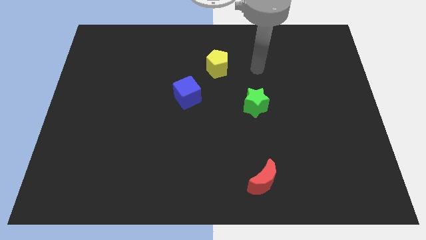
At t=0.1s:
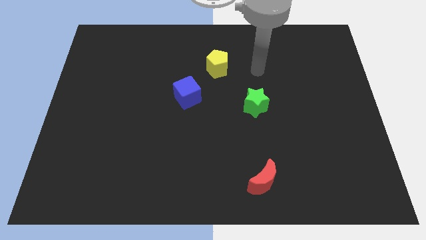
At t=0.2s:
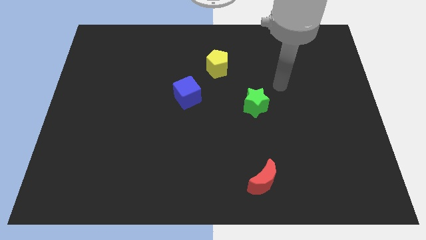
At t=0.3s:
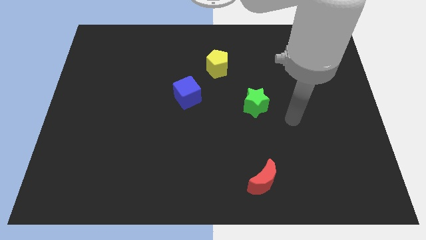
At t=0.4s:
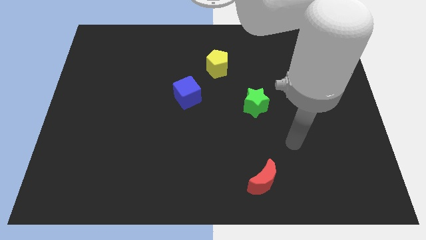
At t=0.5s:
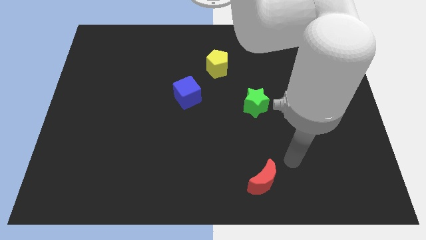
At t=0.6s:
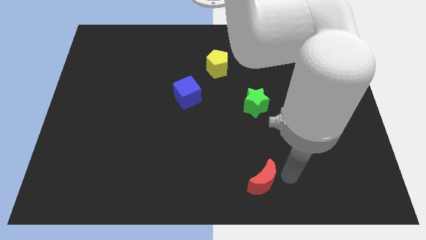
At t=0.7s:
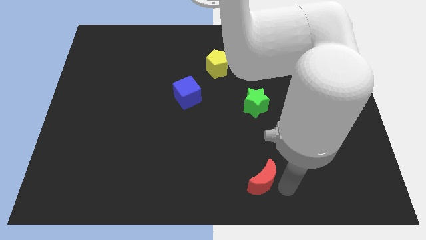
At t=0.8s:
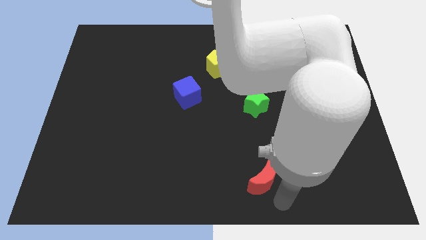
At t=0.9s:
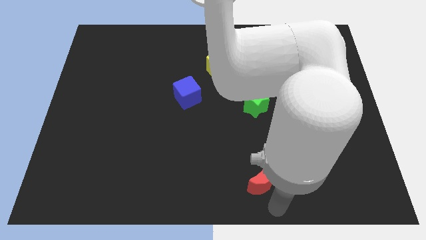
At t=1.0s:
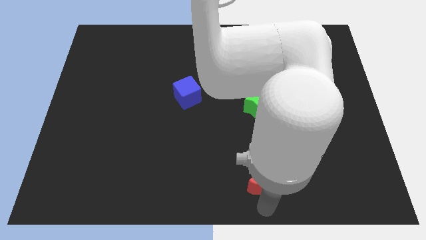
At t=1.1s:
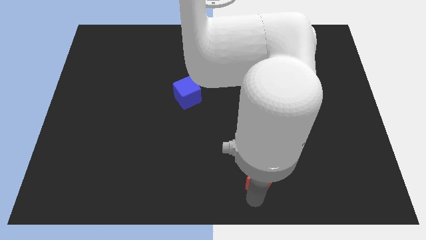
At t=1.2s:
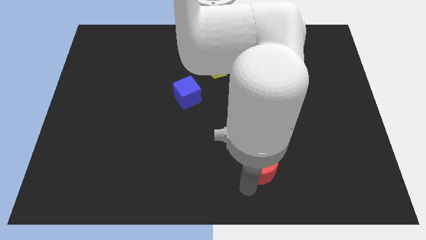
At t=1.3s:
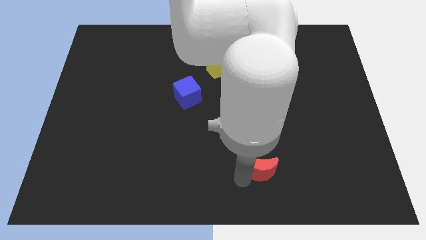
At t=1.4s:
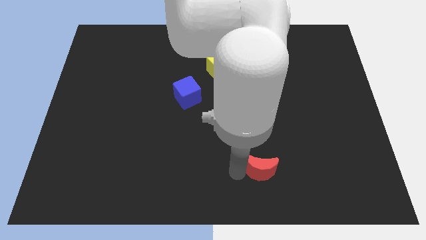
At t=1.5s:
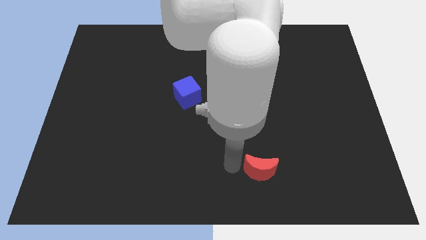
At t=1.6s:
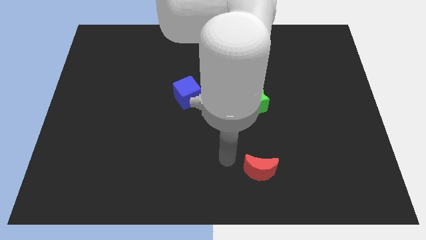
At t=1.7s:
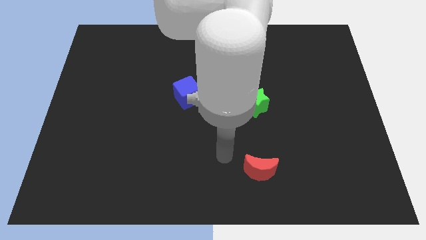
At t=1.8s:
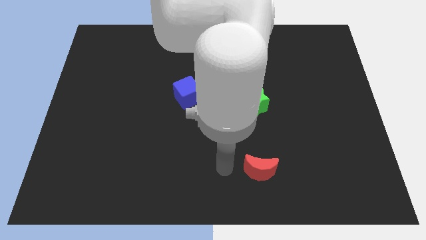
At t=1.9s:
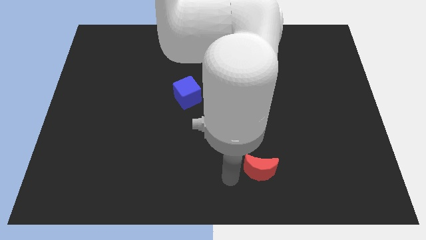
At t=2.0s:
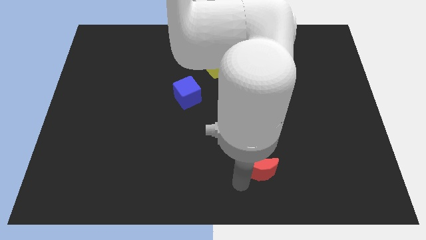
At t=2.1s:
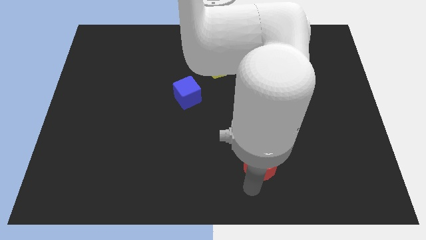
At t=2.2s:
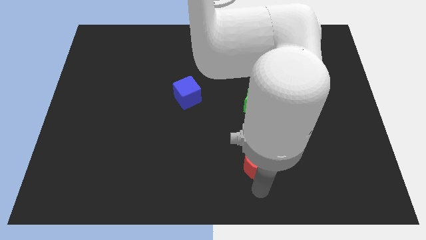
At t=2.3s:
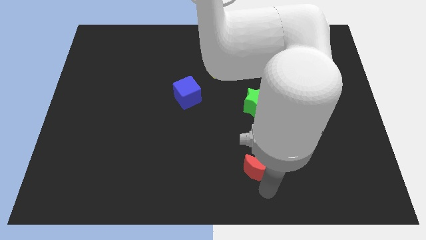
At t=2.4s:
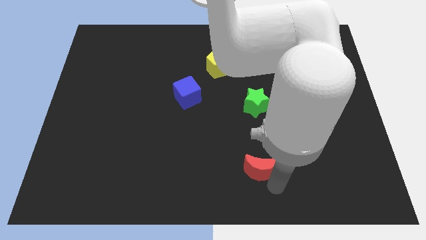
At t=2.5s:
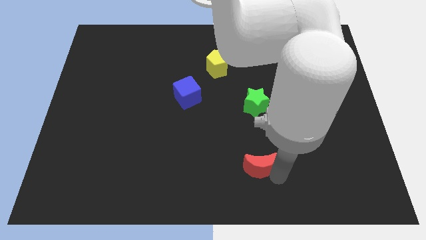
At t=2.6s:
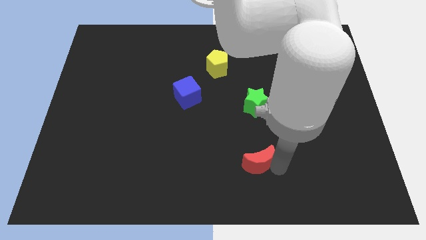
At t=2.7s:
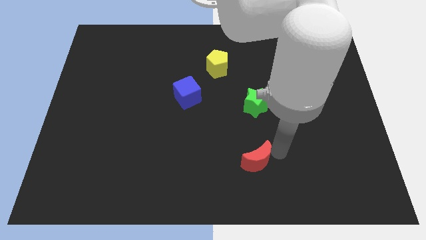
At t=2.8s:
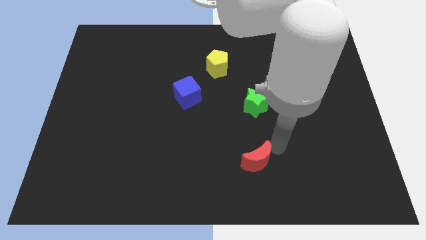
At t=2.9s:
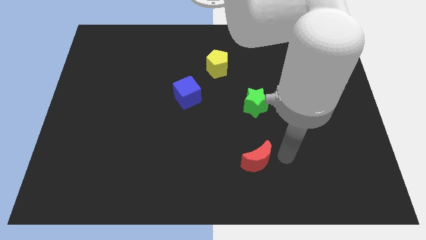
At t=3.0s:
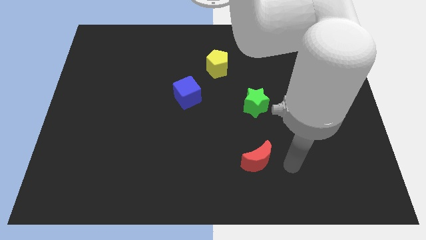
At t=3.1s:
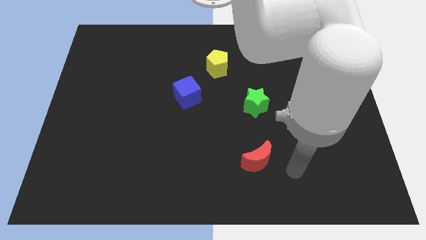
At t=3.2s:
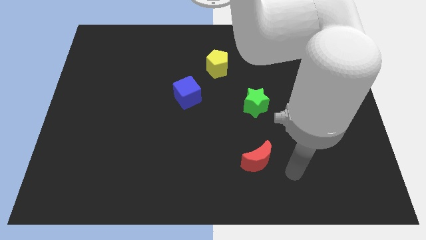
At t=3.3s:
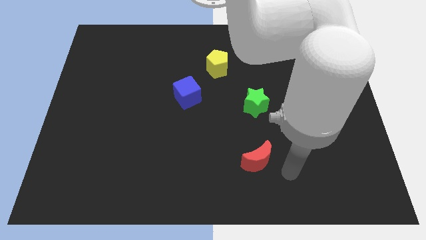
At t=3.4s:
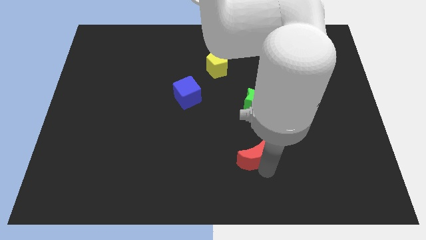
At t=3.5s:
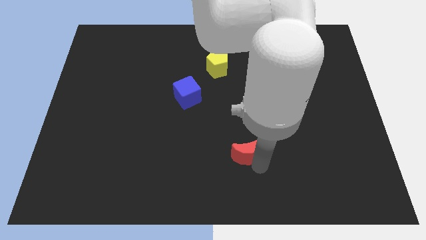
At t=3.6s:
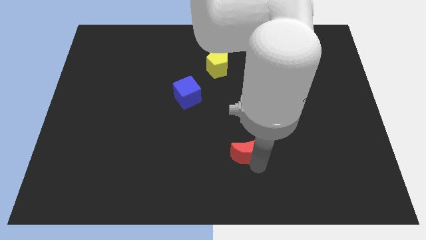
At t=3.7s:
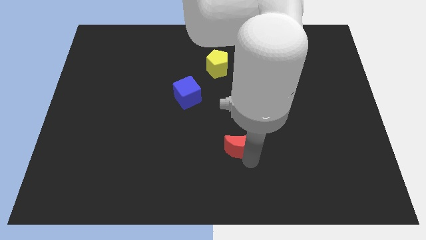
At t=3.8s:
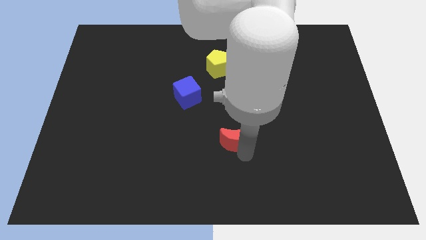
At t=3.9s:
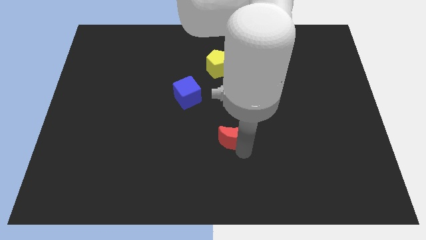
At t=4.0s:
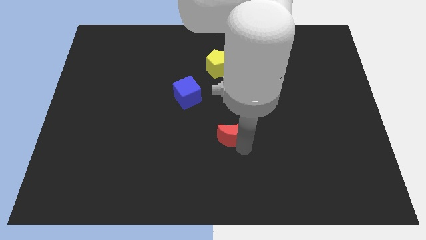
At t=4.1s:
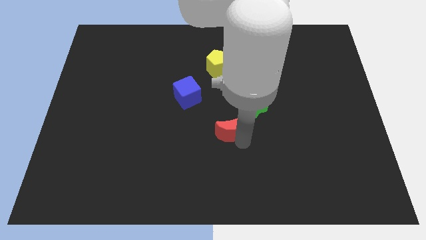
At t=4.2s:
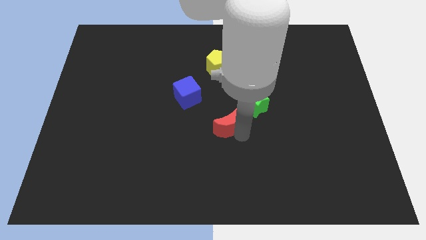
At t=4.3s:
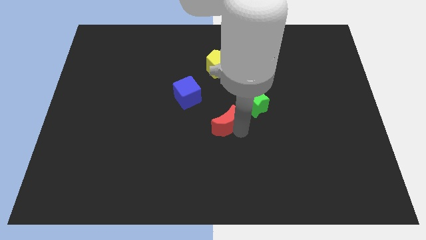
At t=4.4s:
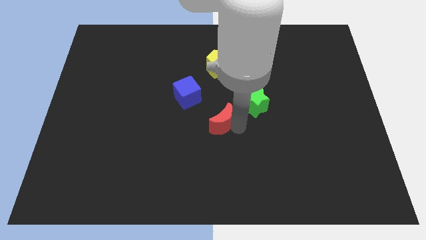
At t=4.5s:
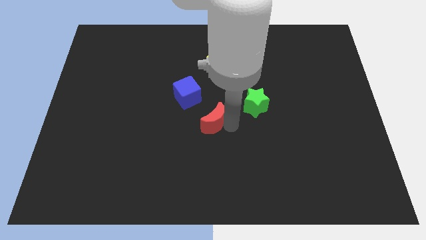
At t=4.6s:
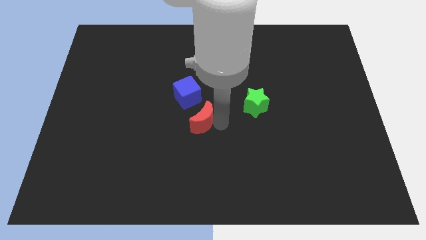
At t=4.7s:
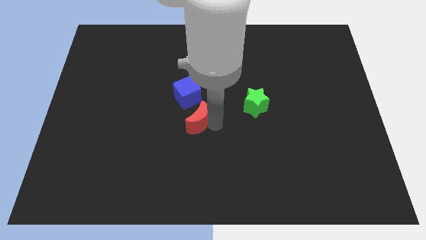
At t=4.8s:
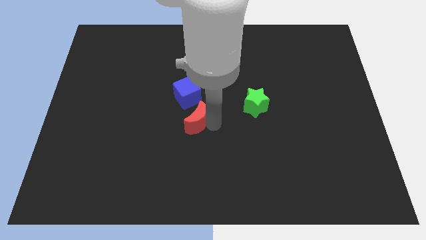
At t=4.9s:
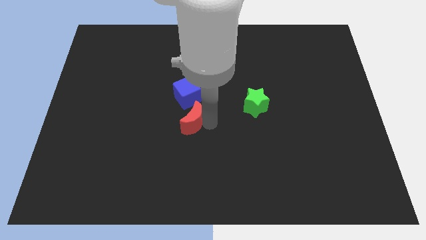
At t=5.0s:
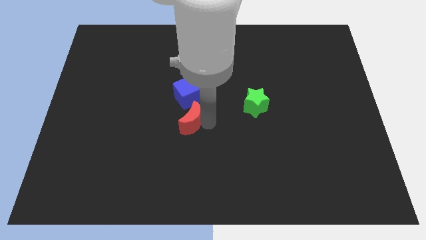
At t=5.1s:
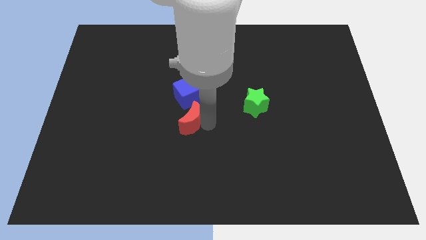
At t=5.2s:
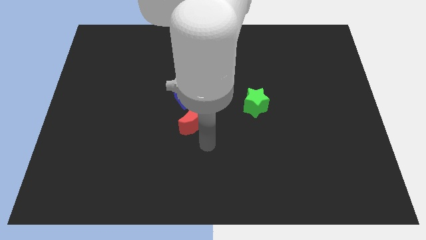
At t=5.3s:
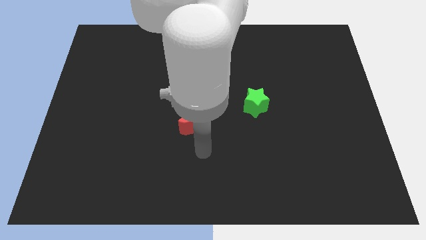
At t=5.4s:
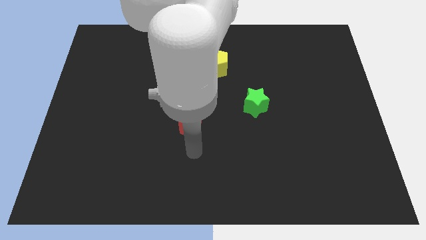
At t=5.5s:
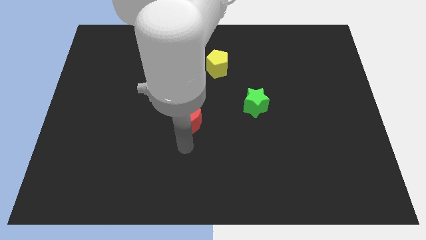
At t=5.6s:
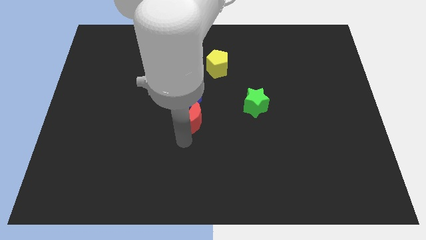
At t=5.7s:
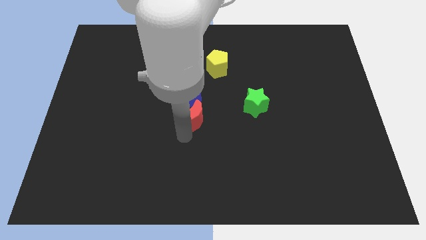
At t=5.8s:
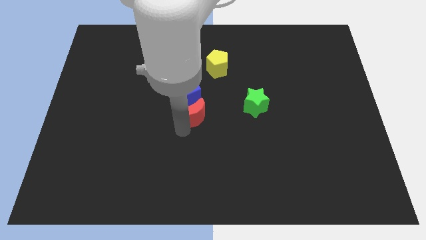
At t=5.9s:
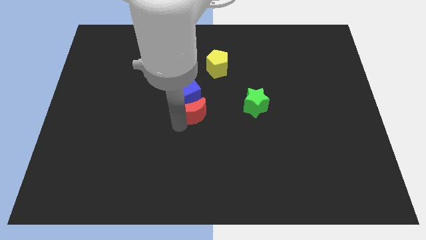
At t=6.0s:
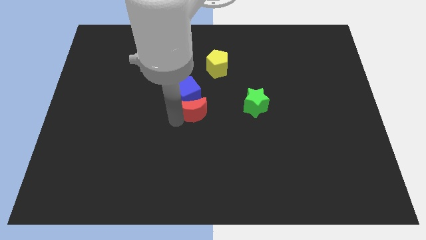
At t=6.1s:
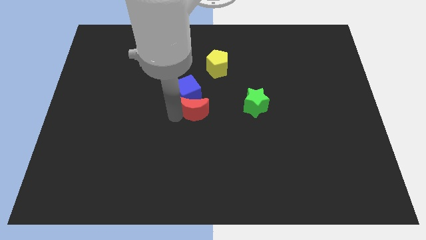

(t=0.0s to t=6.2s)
put the red block towards the cube

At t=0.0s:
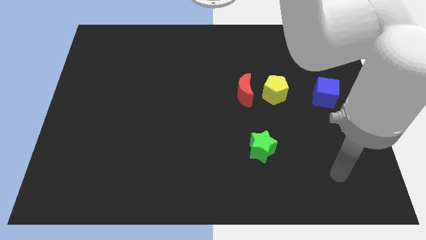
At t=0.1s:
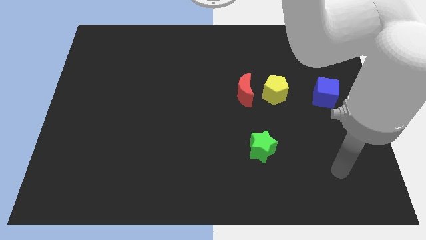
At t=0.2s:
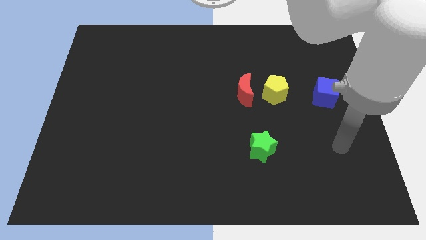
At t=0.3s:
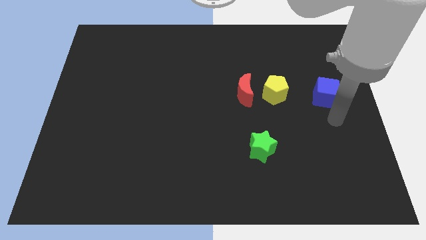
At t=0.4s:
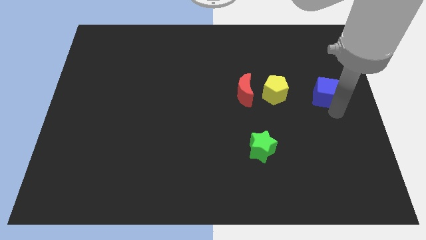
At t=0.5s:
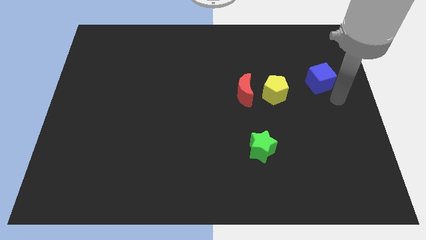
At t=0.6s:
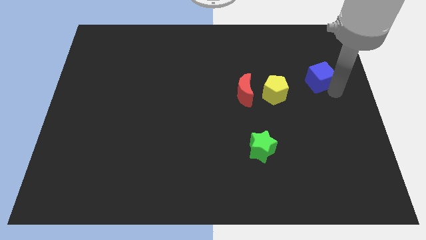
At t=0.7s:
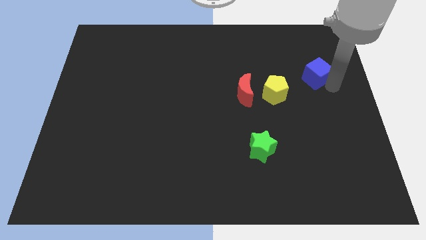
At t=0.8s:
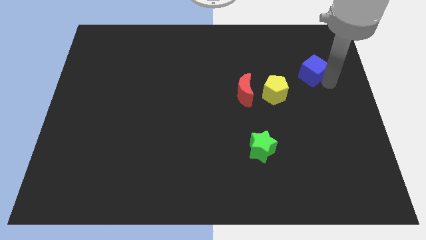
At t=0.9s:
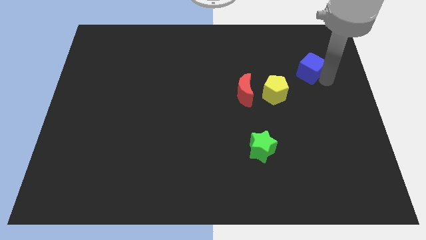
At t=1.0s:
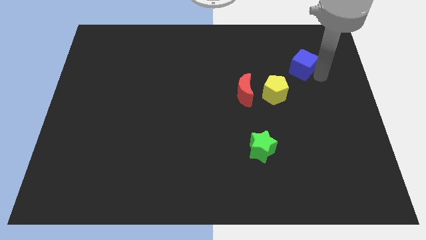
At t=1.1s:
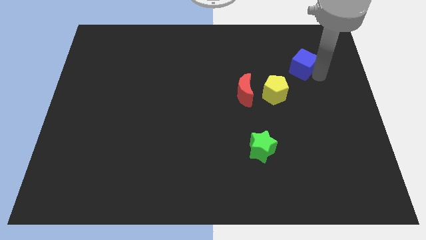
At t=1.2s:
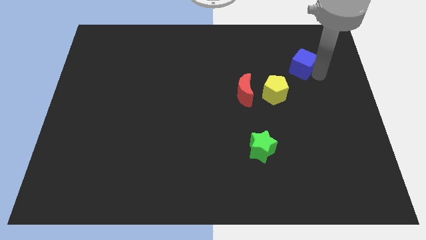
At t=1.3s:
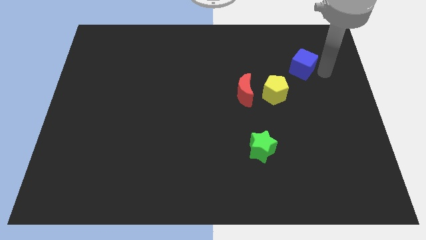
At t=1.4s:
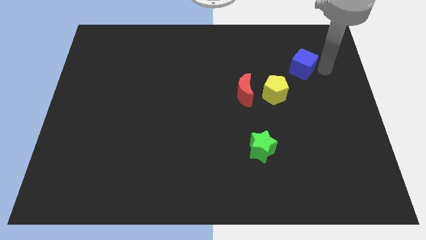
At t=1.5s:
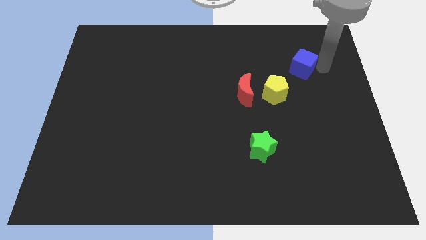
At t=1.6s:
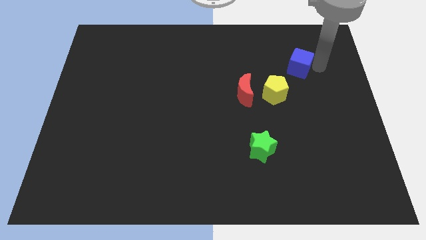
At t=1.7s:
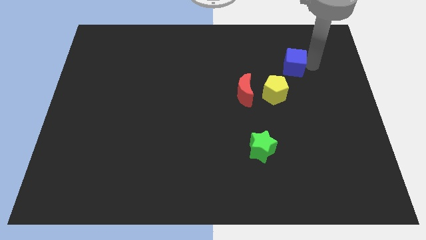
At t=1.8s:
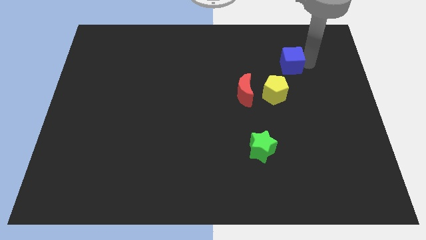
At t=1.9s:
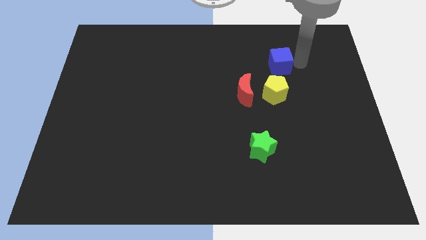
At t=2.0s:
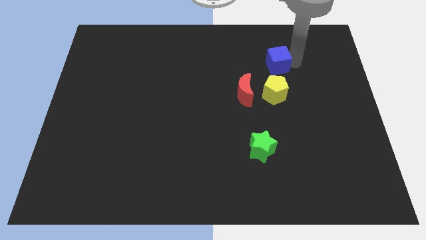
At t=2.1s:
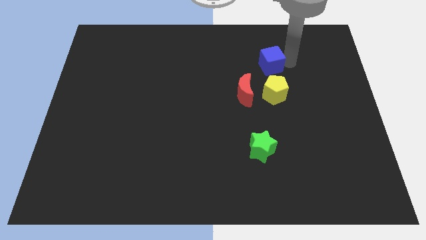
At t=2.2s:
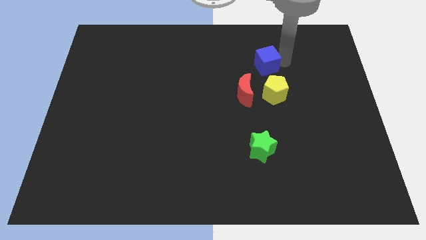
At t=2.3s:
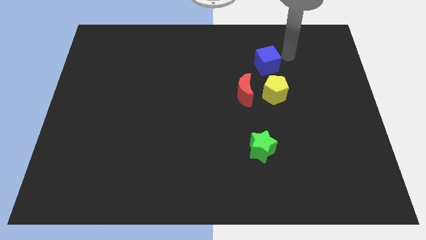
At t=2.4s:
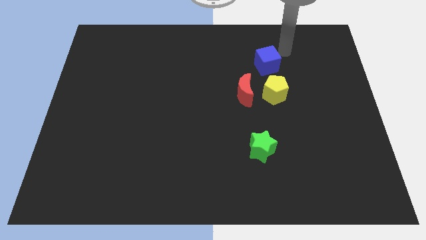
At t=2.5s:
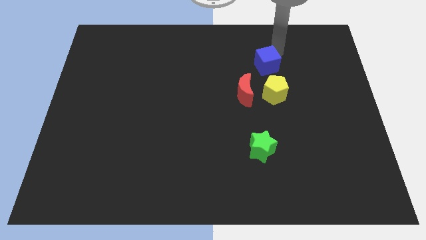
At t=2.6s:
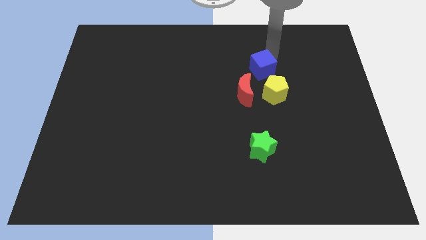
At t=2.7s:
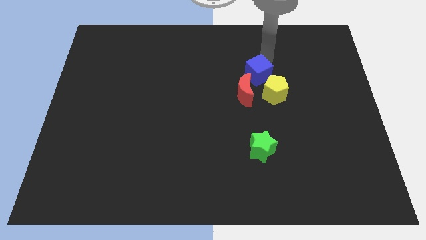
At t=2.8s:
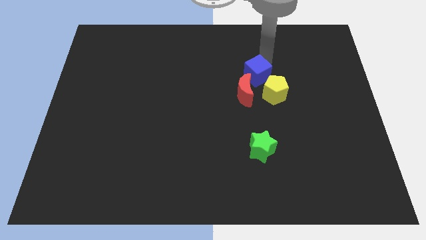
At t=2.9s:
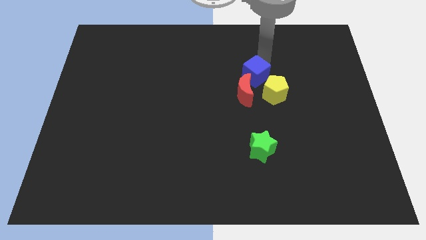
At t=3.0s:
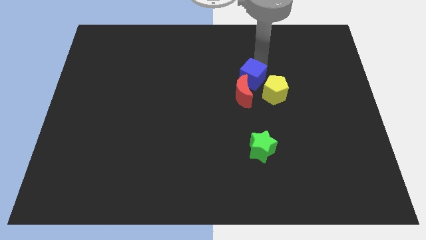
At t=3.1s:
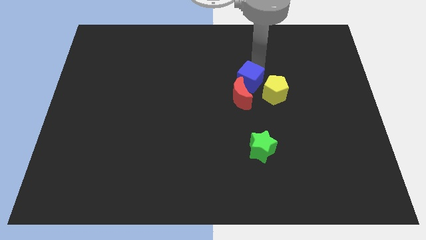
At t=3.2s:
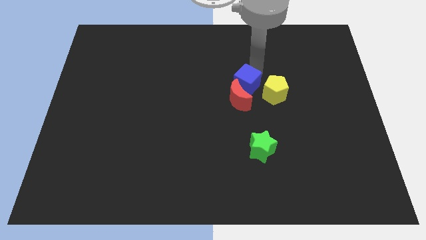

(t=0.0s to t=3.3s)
push the blue cube close to the moon
